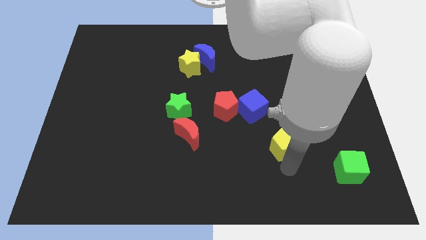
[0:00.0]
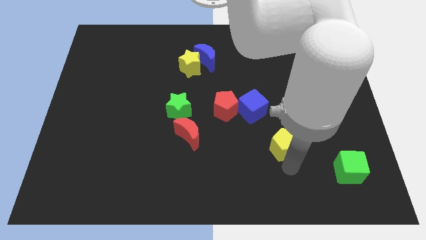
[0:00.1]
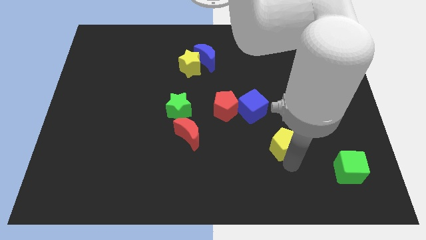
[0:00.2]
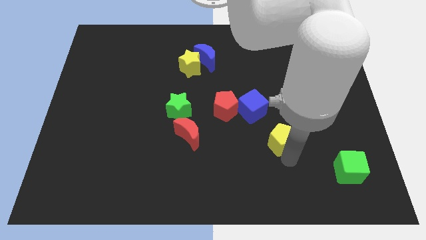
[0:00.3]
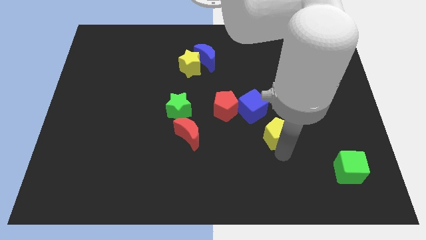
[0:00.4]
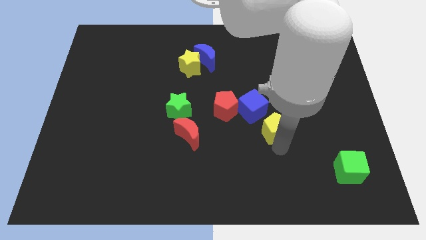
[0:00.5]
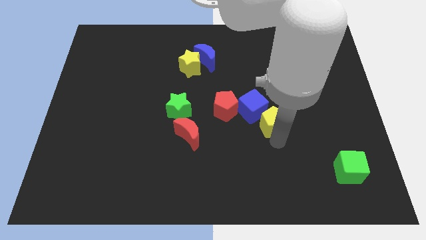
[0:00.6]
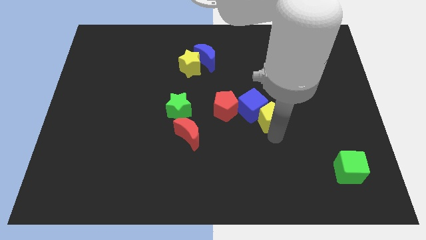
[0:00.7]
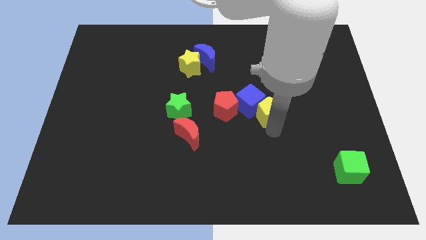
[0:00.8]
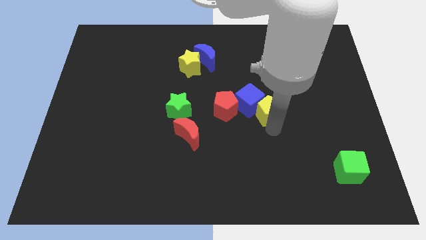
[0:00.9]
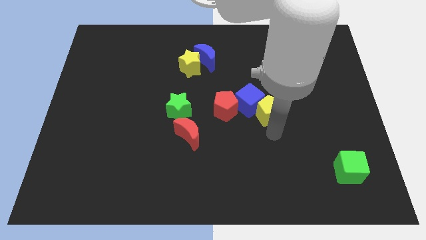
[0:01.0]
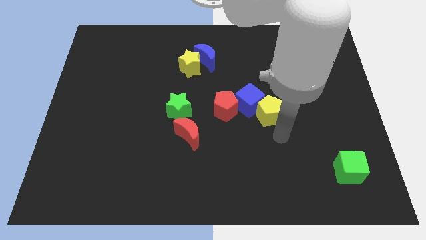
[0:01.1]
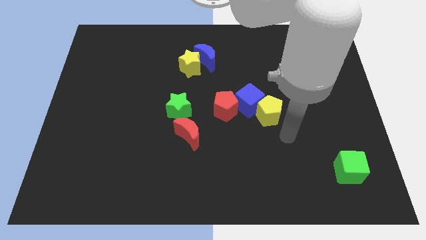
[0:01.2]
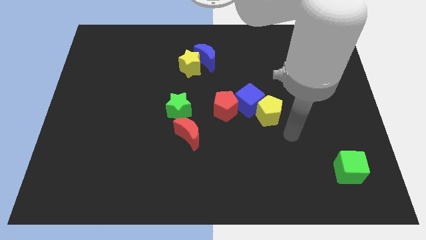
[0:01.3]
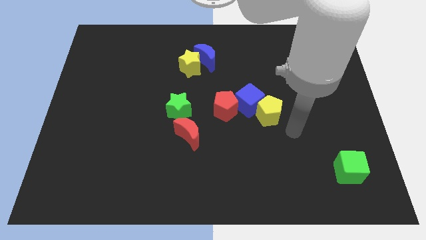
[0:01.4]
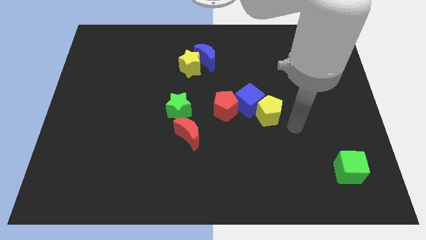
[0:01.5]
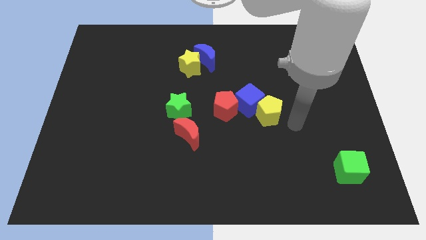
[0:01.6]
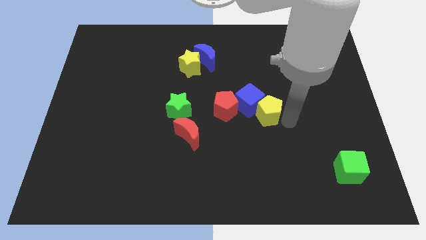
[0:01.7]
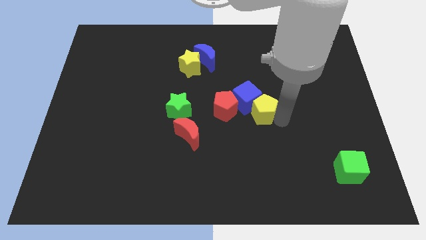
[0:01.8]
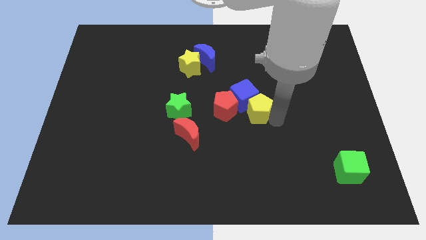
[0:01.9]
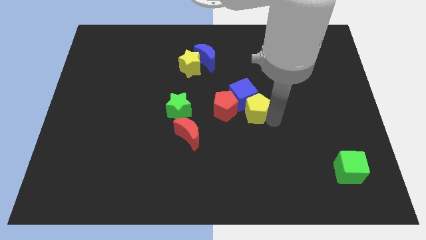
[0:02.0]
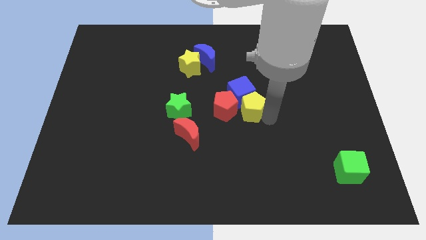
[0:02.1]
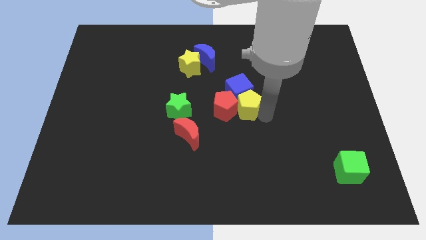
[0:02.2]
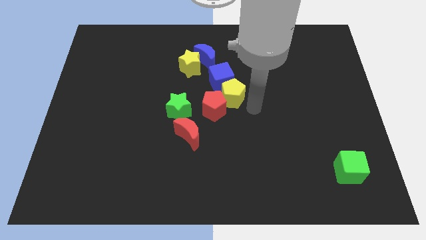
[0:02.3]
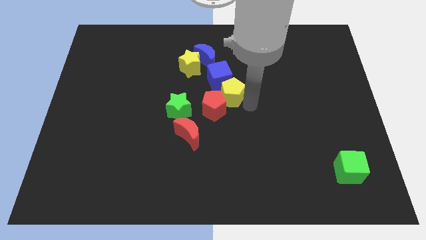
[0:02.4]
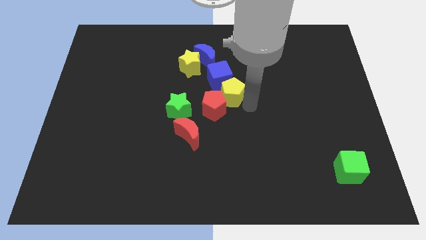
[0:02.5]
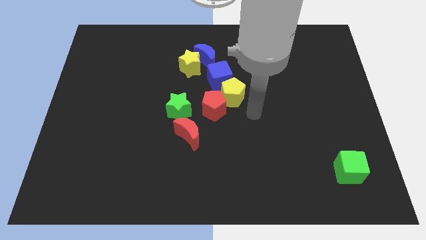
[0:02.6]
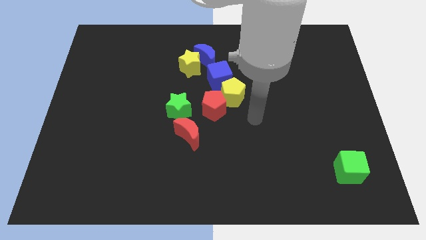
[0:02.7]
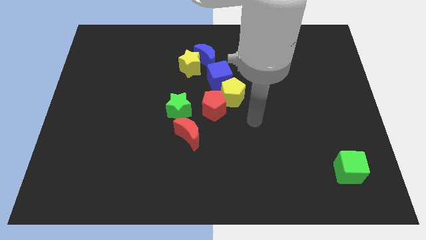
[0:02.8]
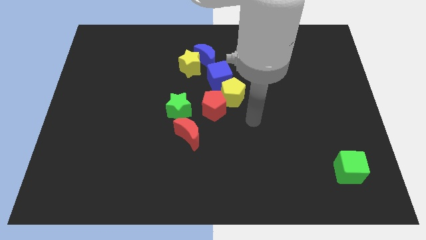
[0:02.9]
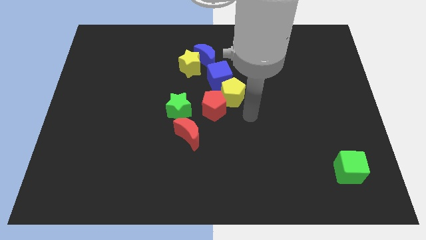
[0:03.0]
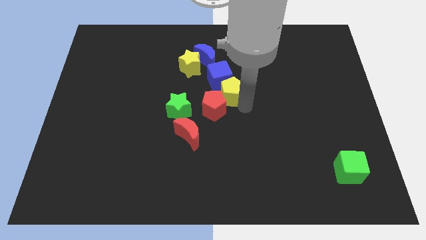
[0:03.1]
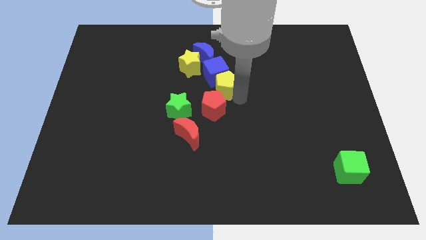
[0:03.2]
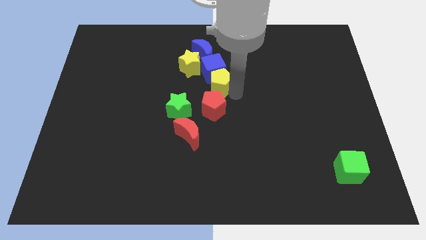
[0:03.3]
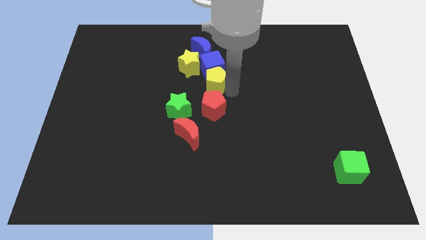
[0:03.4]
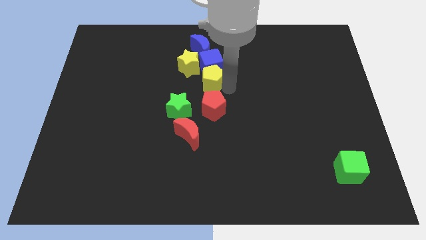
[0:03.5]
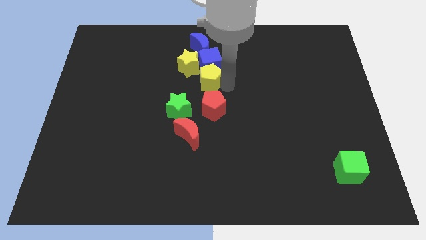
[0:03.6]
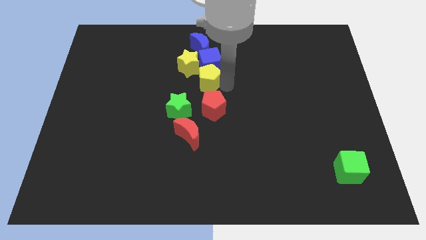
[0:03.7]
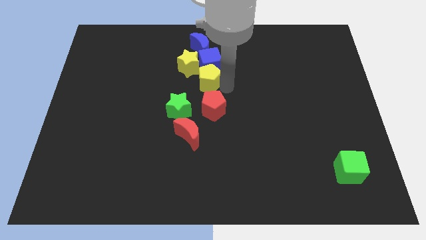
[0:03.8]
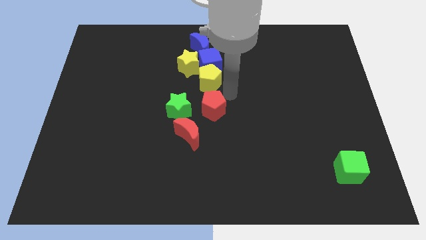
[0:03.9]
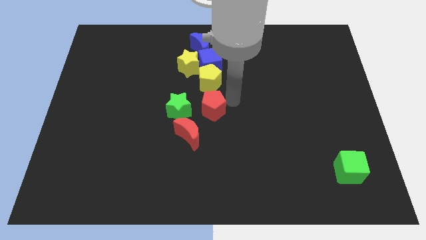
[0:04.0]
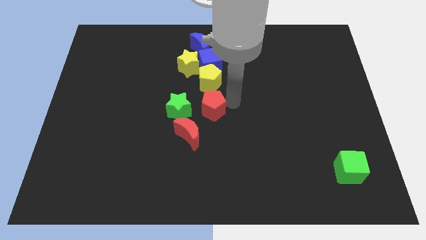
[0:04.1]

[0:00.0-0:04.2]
push the yellow pentagon and blue cube on top of red pentagon

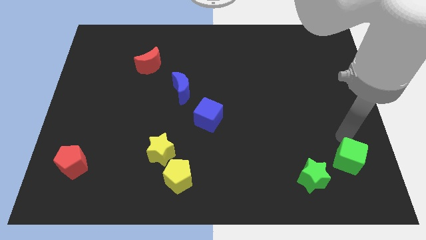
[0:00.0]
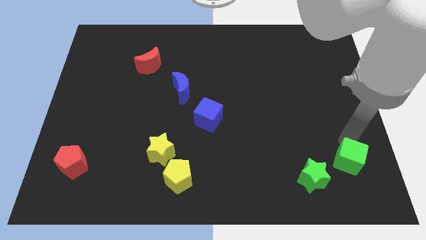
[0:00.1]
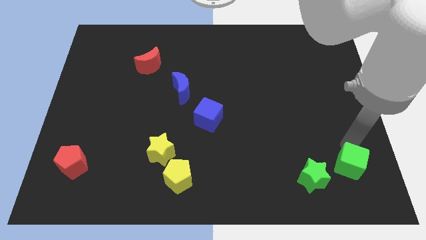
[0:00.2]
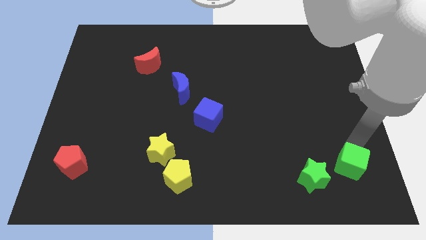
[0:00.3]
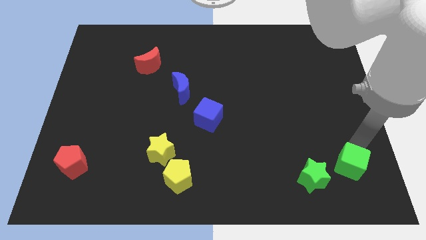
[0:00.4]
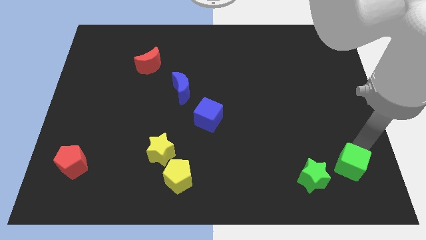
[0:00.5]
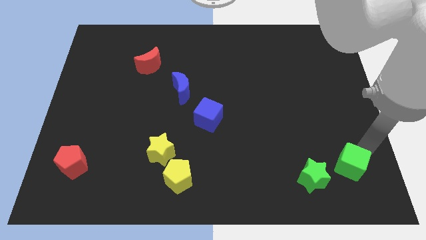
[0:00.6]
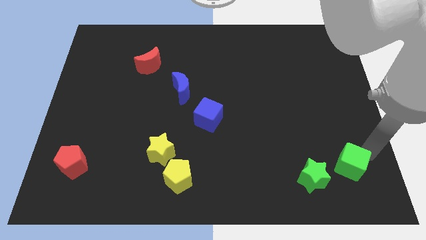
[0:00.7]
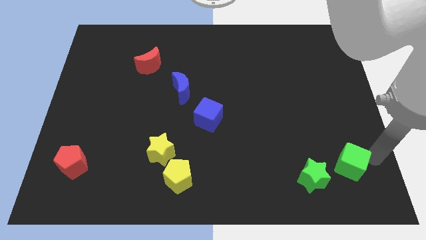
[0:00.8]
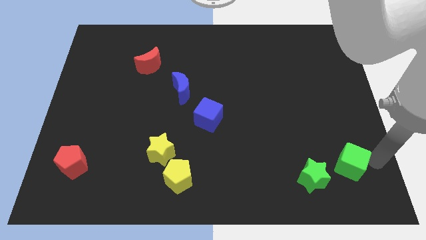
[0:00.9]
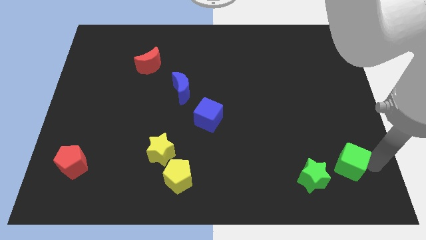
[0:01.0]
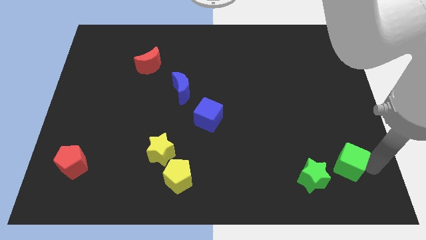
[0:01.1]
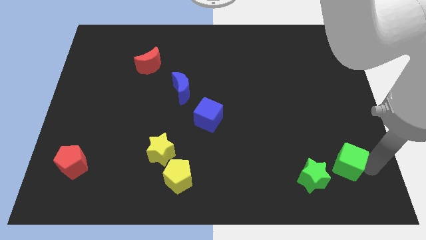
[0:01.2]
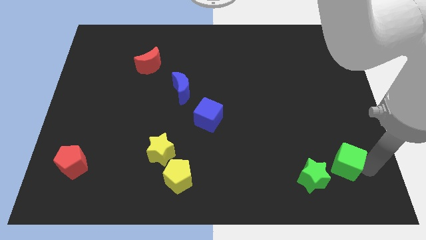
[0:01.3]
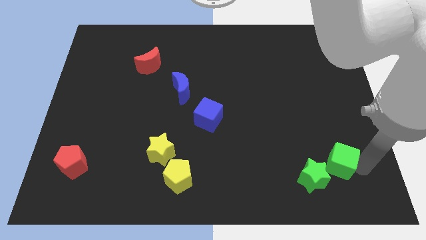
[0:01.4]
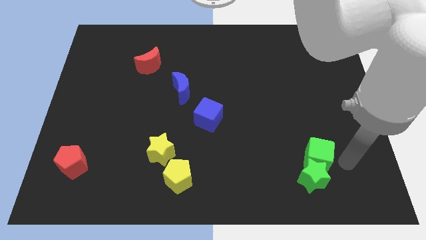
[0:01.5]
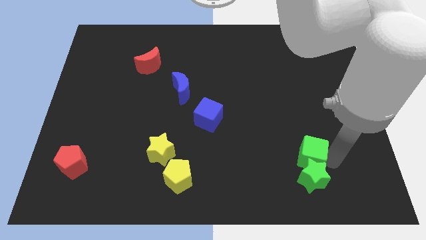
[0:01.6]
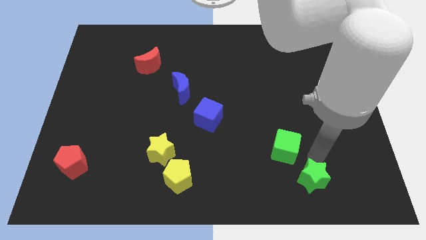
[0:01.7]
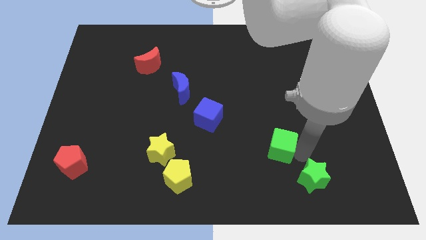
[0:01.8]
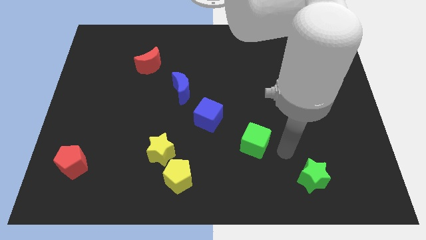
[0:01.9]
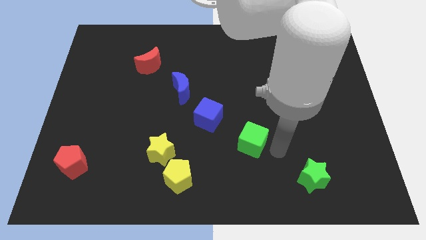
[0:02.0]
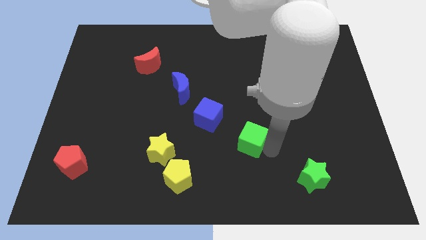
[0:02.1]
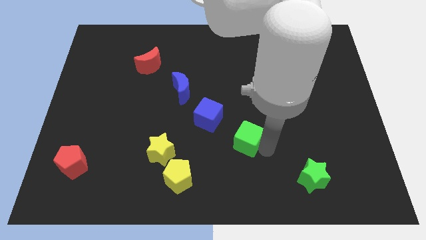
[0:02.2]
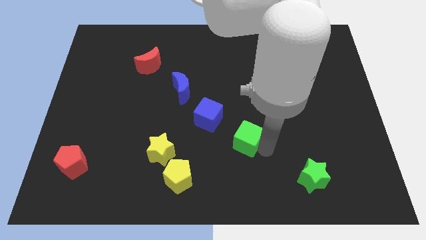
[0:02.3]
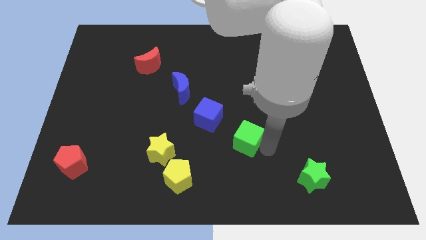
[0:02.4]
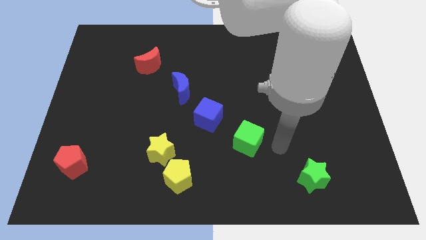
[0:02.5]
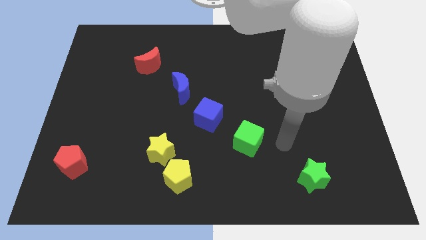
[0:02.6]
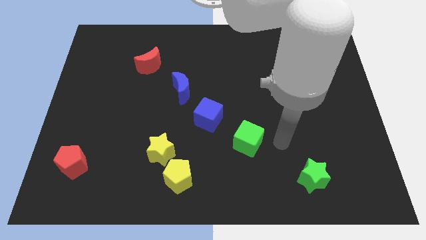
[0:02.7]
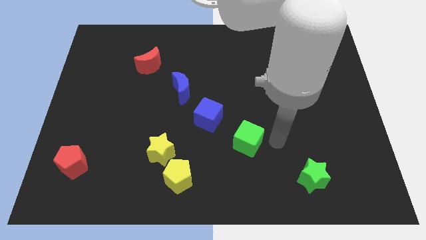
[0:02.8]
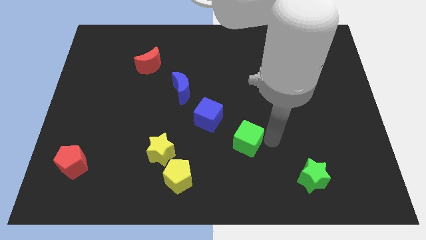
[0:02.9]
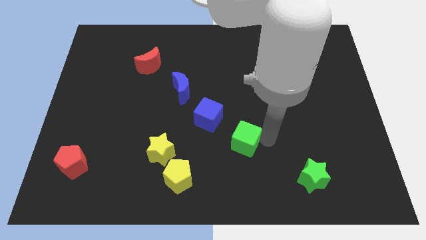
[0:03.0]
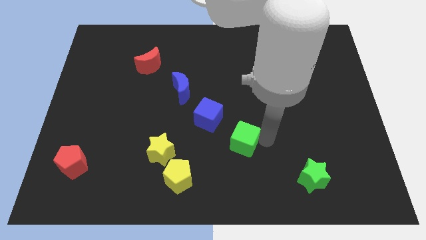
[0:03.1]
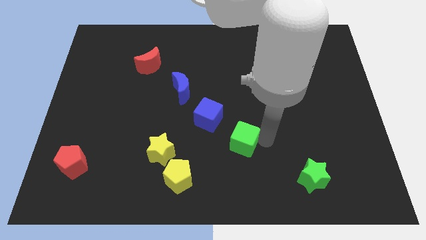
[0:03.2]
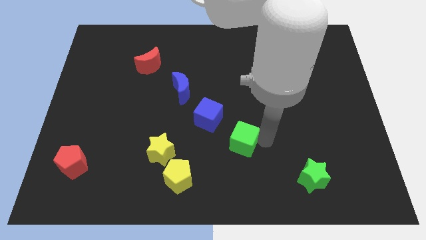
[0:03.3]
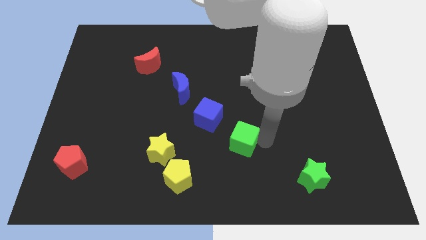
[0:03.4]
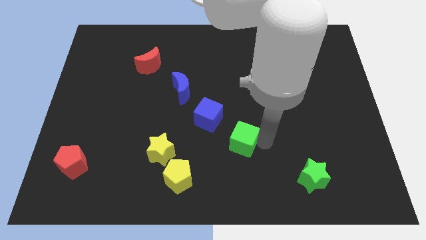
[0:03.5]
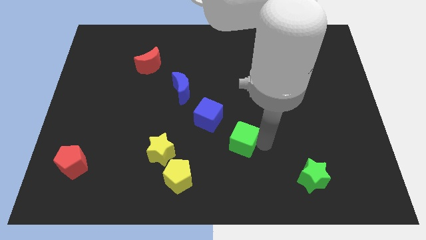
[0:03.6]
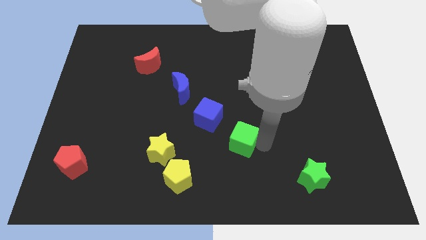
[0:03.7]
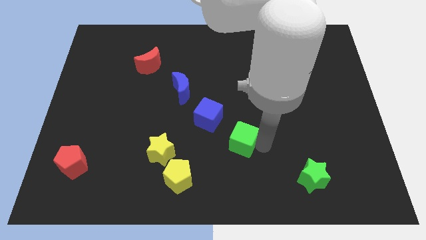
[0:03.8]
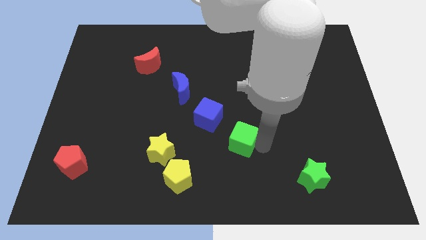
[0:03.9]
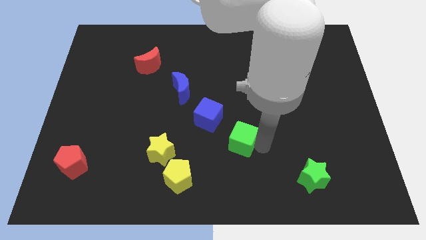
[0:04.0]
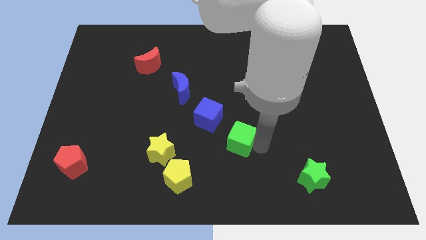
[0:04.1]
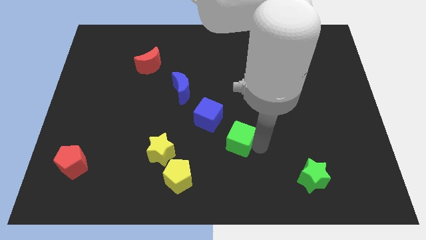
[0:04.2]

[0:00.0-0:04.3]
move the green cube diagonal to the blue cube

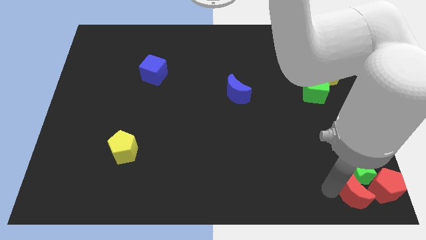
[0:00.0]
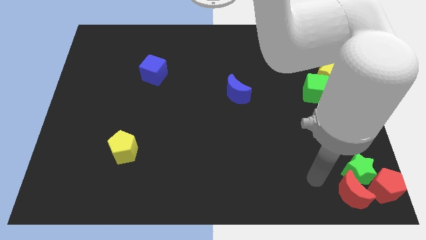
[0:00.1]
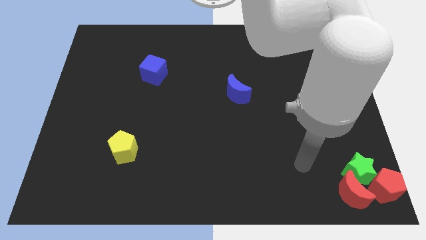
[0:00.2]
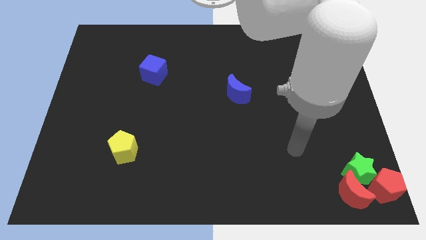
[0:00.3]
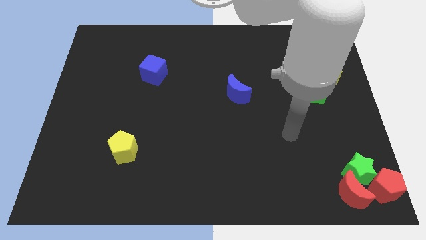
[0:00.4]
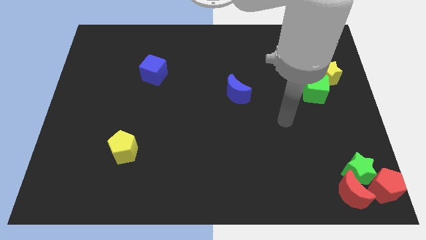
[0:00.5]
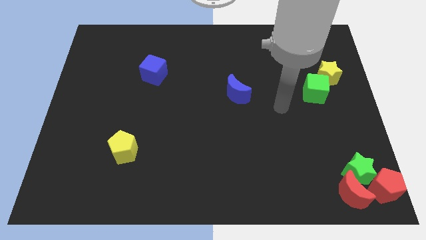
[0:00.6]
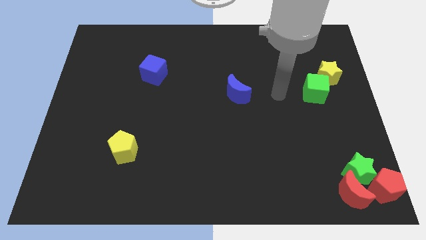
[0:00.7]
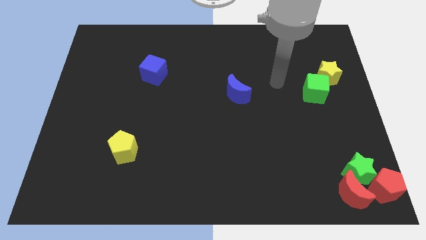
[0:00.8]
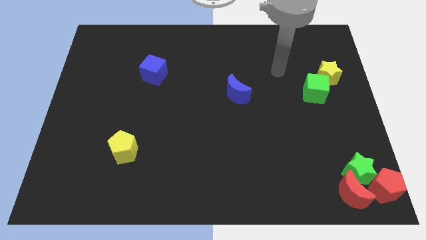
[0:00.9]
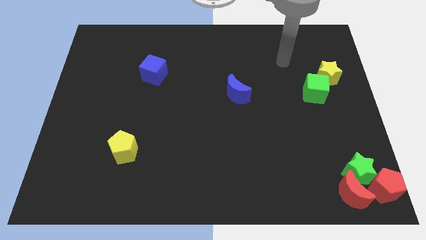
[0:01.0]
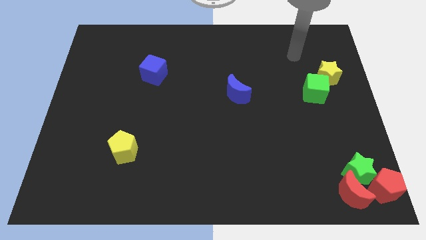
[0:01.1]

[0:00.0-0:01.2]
move your arm away from the red moon
